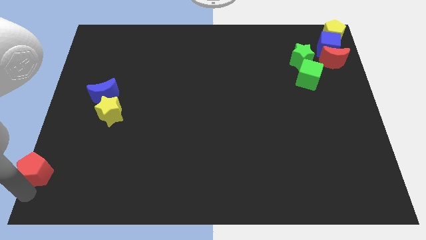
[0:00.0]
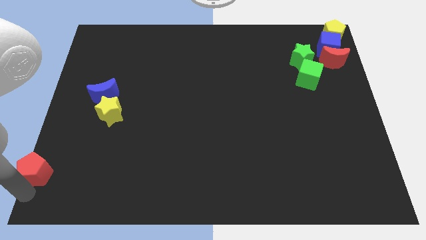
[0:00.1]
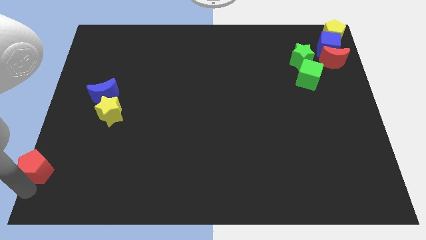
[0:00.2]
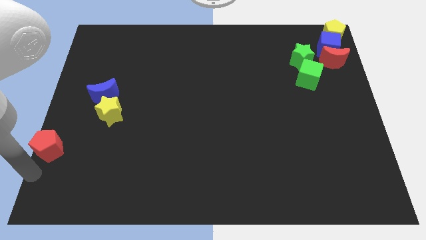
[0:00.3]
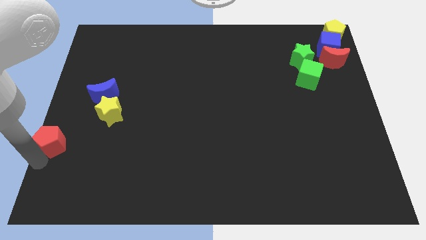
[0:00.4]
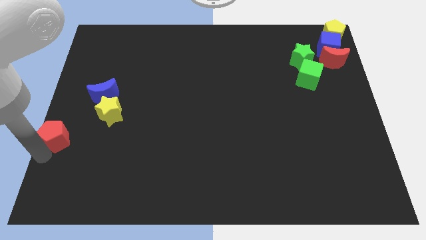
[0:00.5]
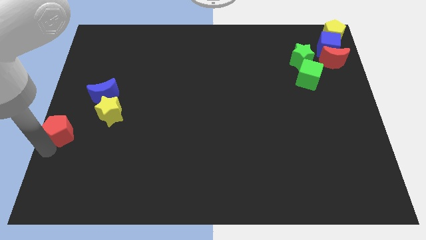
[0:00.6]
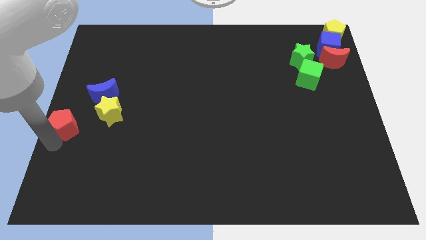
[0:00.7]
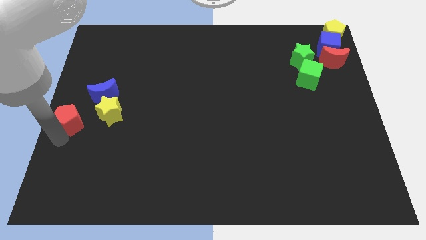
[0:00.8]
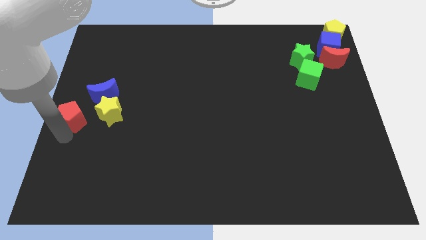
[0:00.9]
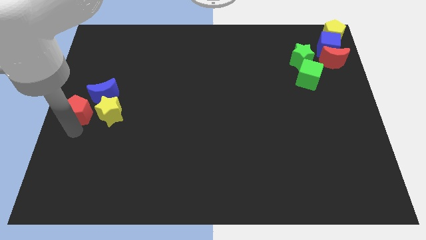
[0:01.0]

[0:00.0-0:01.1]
push red pentagon to the left of yellow star

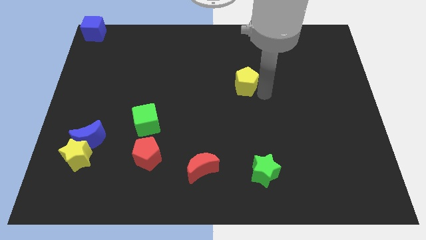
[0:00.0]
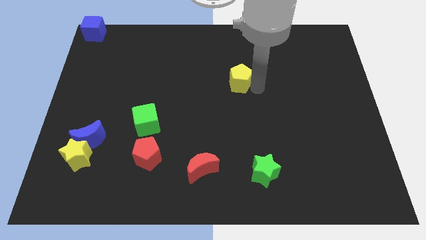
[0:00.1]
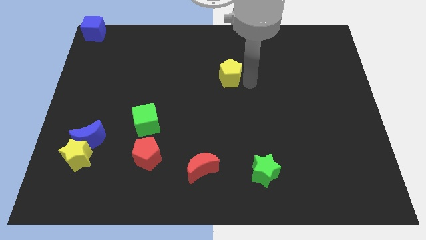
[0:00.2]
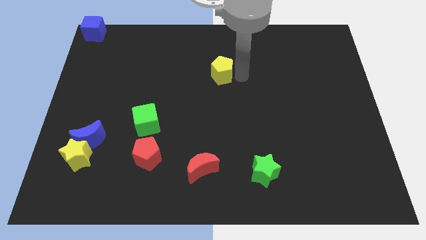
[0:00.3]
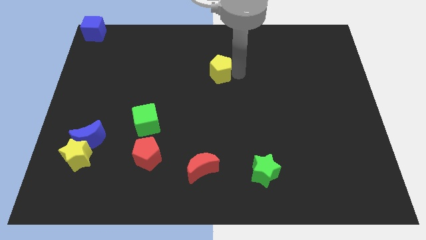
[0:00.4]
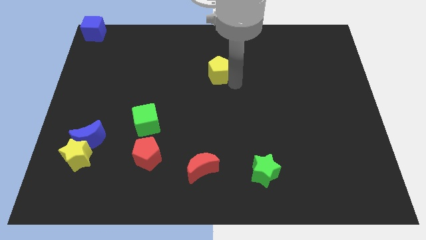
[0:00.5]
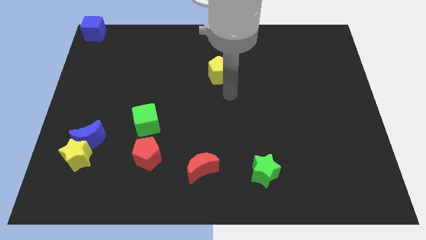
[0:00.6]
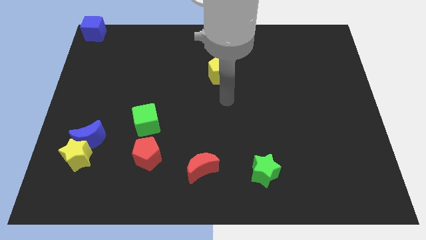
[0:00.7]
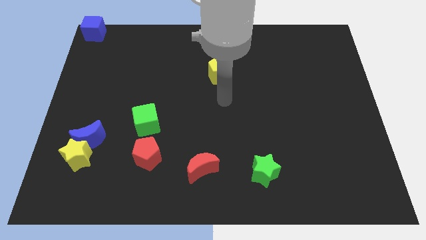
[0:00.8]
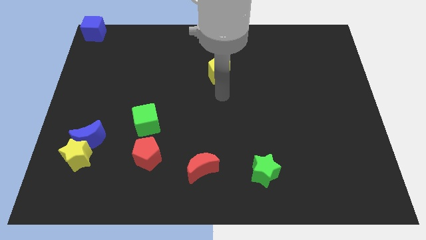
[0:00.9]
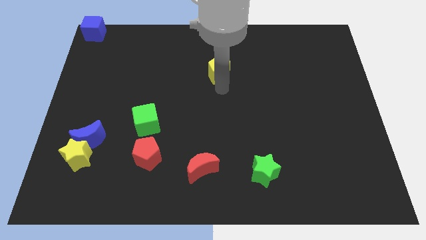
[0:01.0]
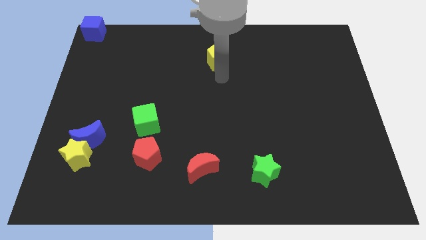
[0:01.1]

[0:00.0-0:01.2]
place yellow pentagon vertically above red moon

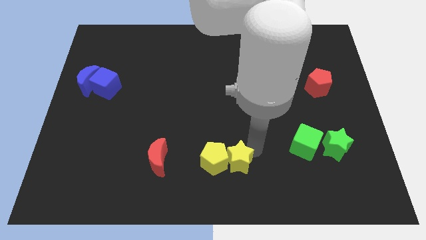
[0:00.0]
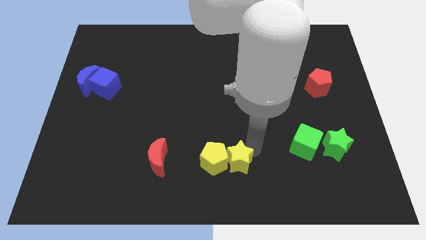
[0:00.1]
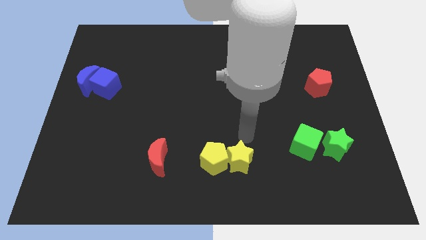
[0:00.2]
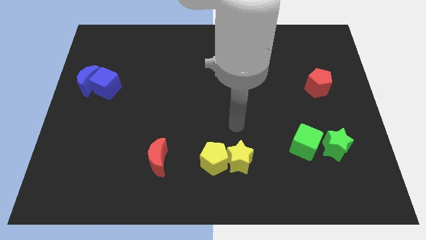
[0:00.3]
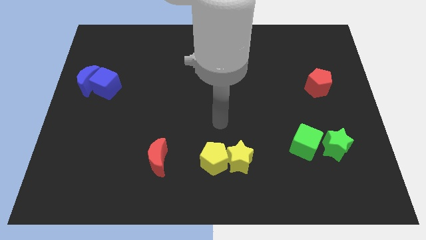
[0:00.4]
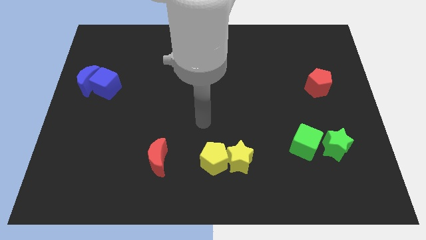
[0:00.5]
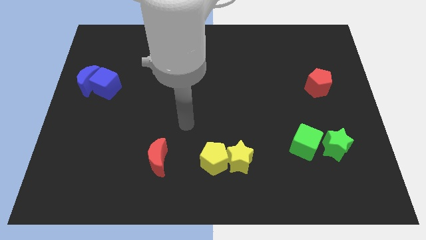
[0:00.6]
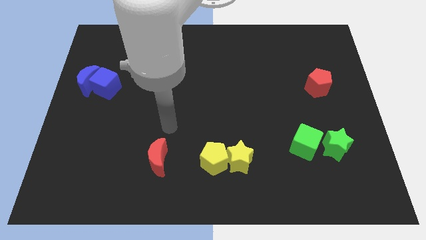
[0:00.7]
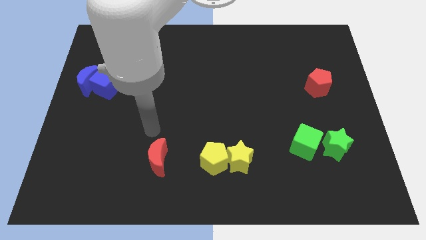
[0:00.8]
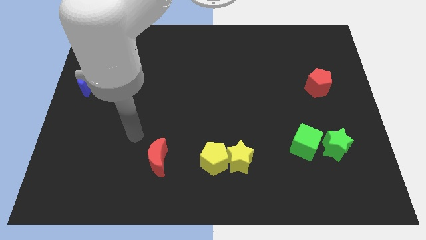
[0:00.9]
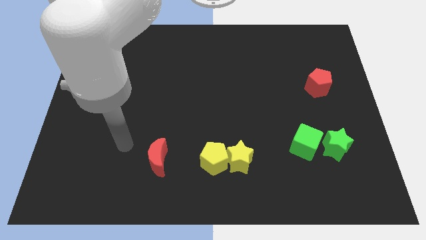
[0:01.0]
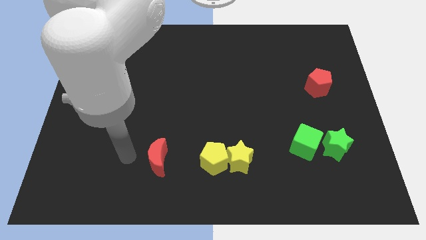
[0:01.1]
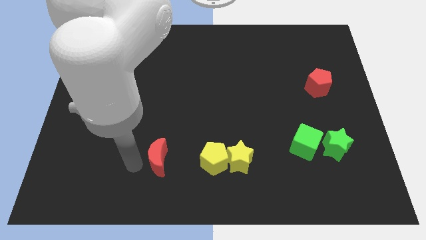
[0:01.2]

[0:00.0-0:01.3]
move your arm to the left of the red moon

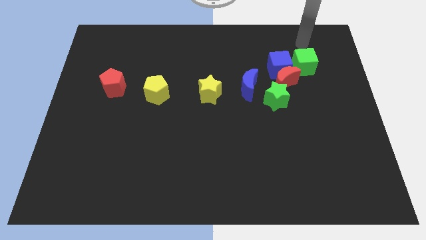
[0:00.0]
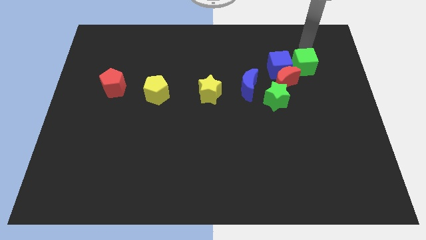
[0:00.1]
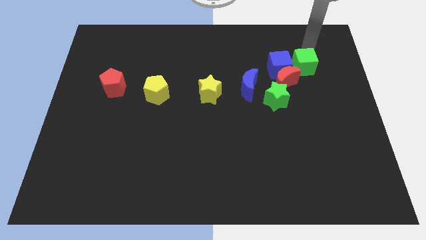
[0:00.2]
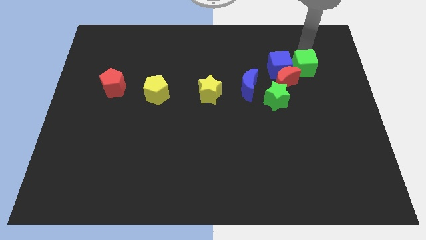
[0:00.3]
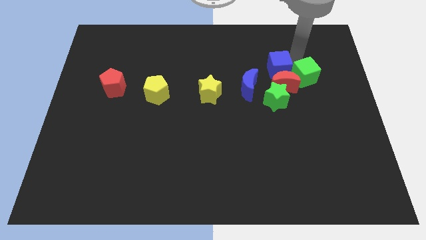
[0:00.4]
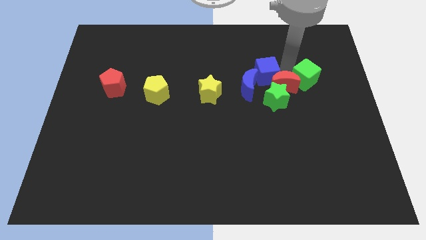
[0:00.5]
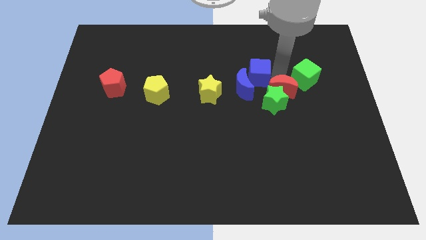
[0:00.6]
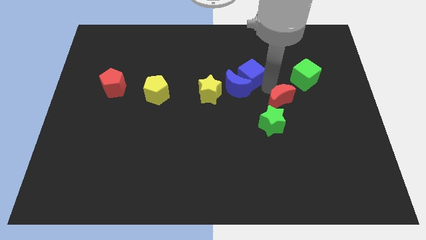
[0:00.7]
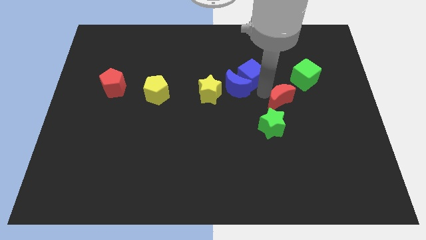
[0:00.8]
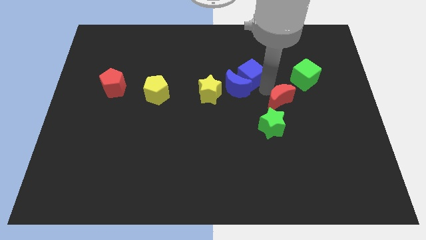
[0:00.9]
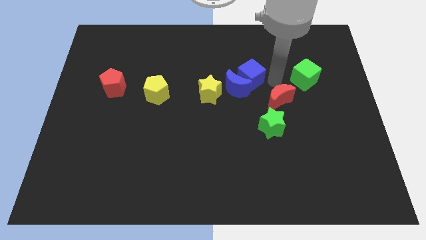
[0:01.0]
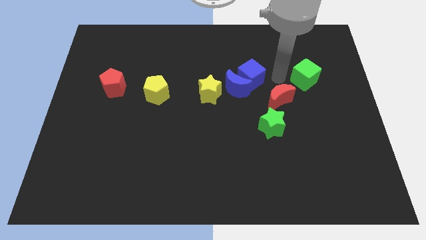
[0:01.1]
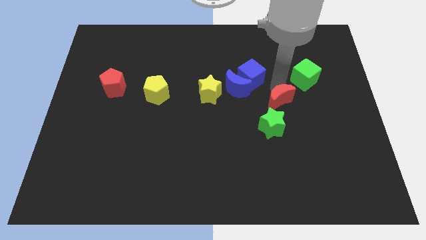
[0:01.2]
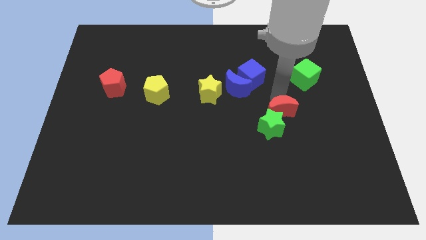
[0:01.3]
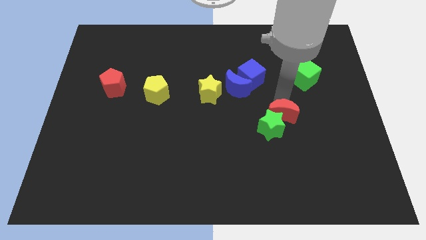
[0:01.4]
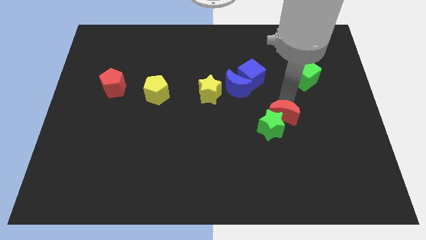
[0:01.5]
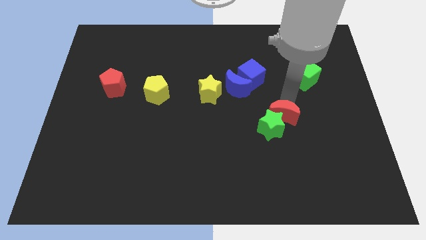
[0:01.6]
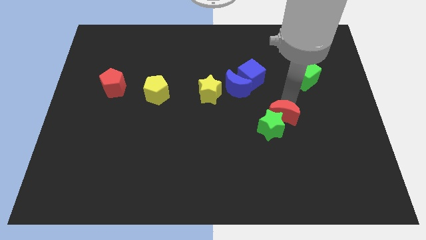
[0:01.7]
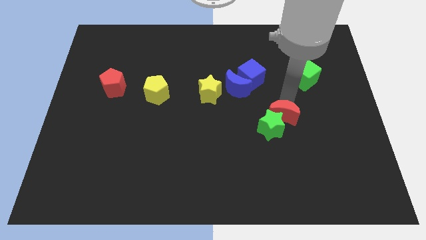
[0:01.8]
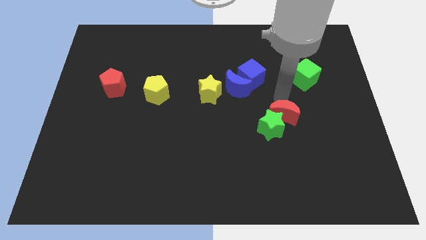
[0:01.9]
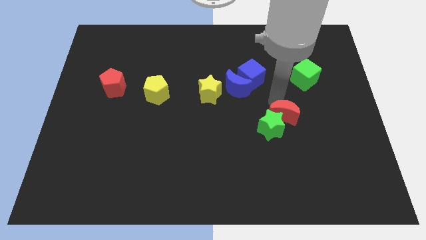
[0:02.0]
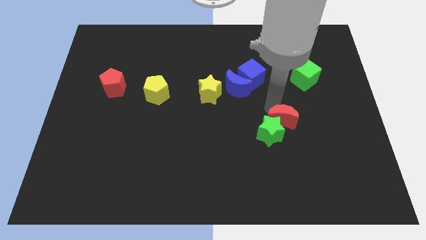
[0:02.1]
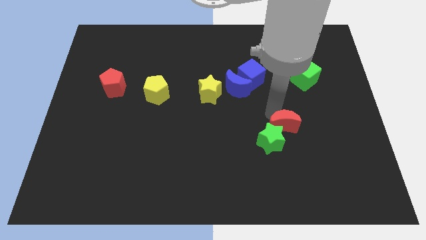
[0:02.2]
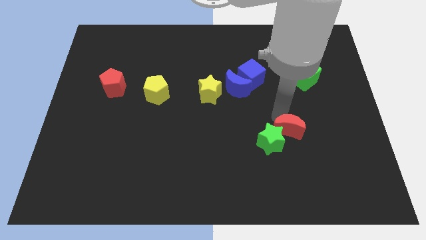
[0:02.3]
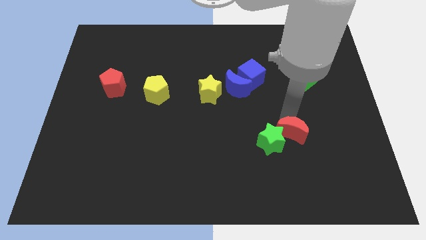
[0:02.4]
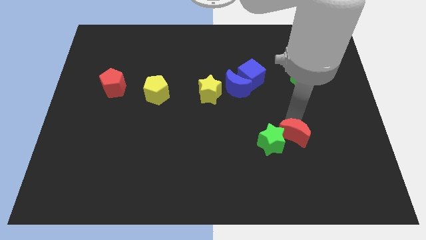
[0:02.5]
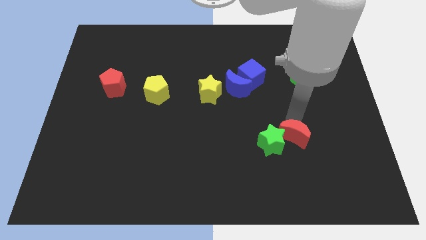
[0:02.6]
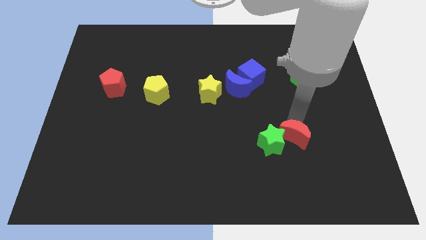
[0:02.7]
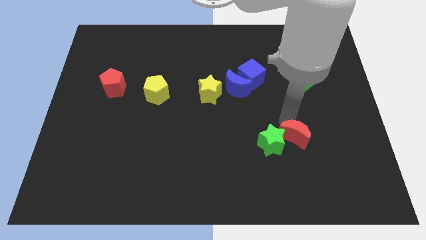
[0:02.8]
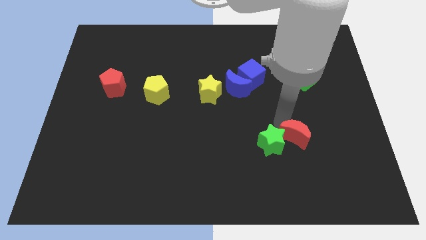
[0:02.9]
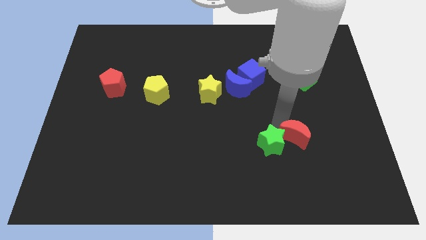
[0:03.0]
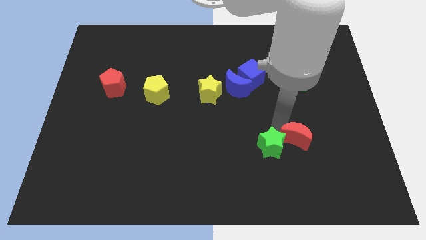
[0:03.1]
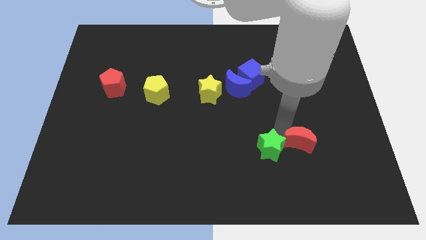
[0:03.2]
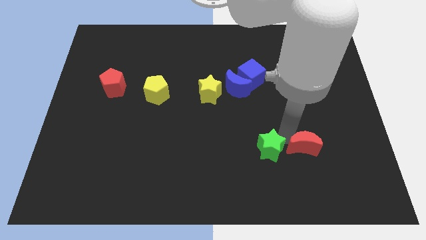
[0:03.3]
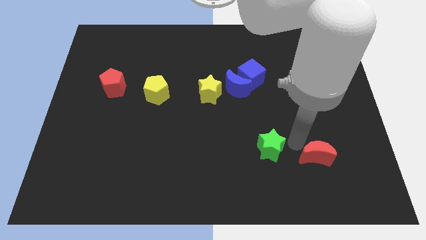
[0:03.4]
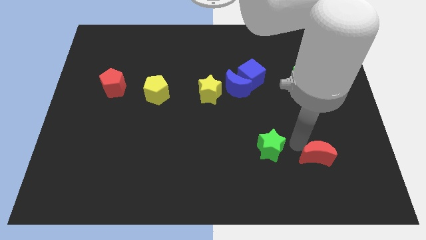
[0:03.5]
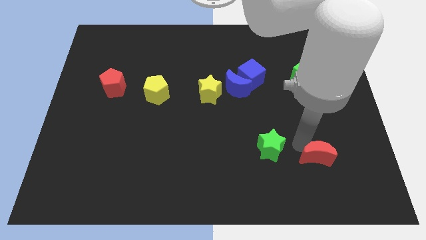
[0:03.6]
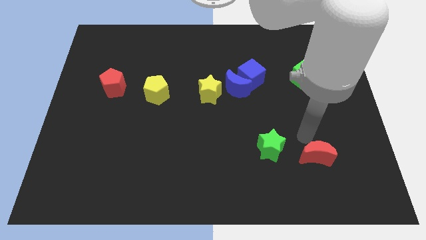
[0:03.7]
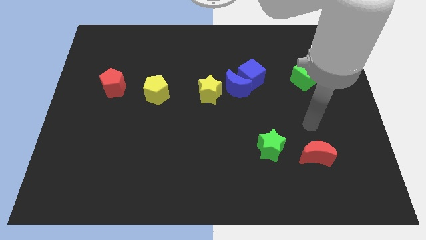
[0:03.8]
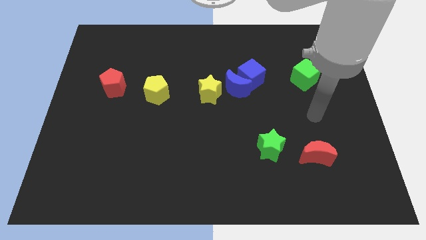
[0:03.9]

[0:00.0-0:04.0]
place the red moon at the right side of the green star

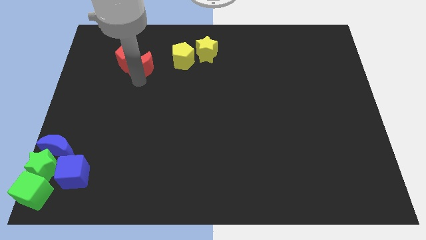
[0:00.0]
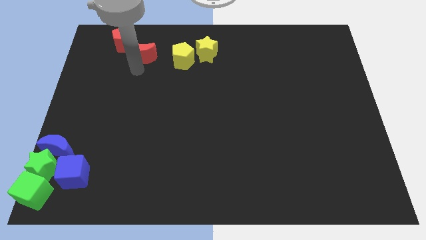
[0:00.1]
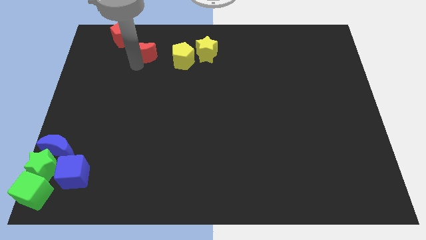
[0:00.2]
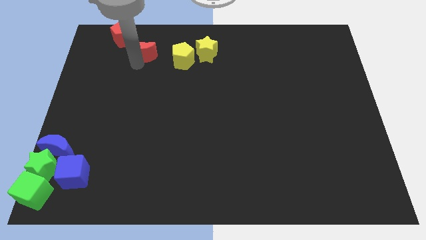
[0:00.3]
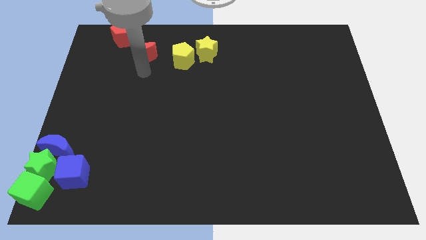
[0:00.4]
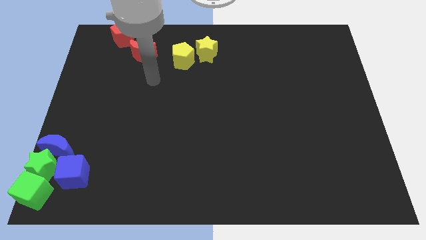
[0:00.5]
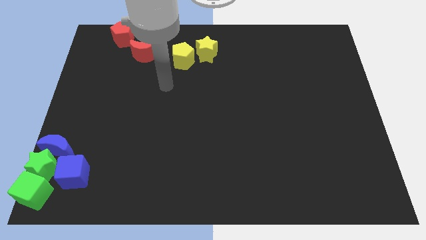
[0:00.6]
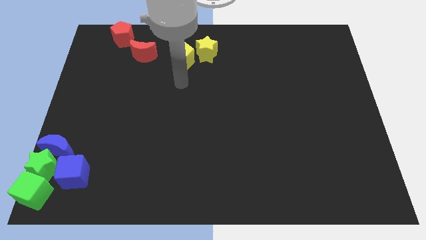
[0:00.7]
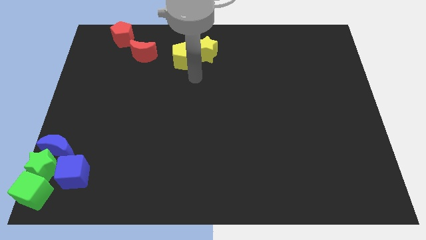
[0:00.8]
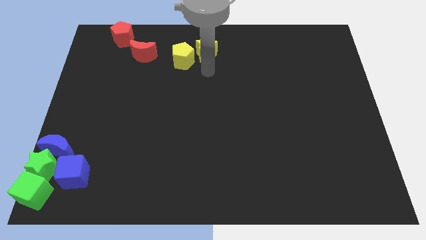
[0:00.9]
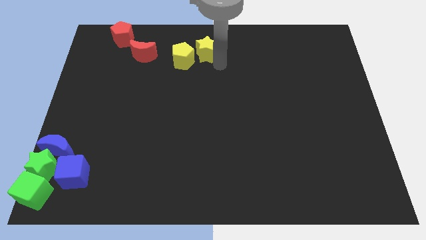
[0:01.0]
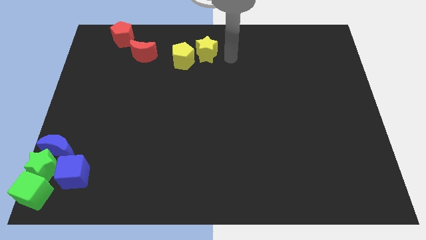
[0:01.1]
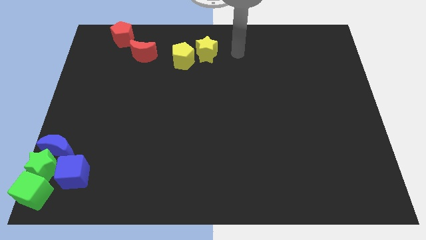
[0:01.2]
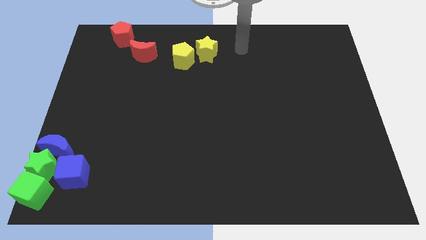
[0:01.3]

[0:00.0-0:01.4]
move red blocks to the top left of the board
